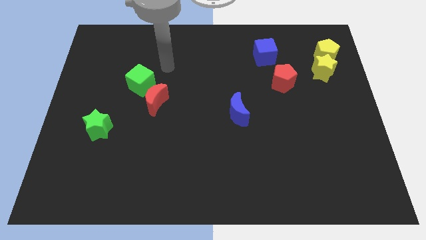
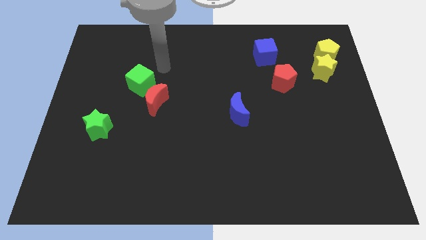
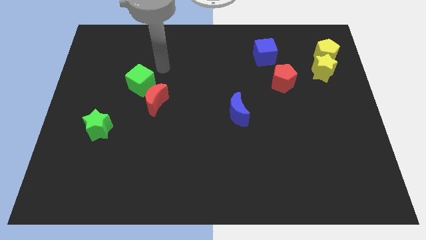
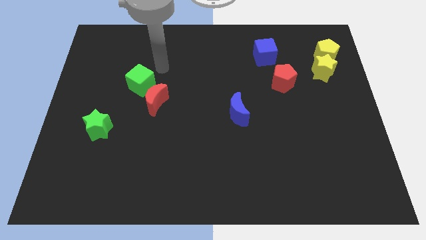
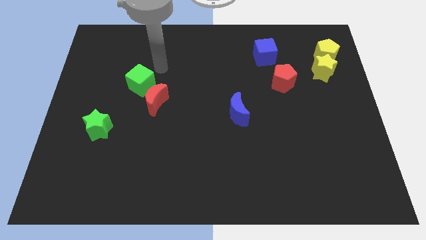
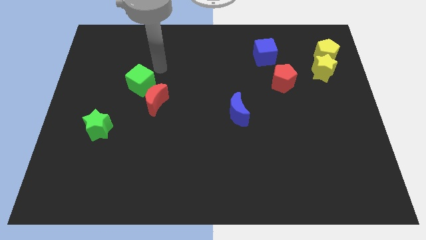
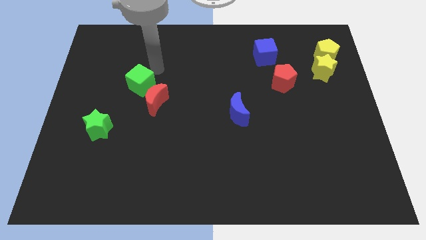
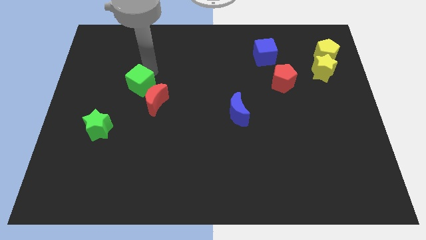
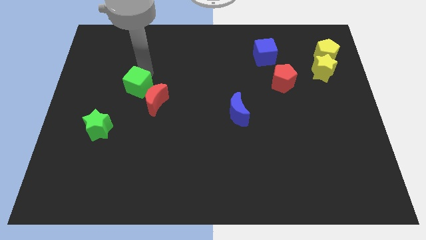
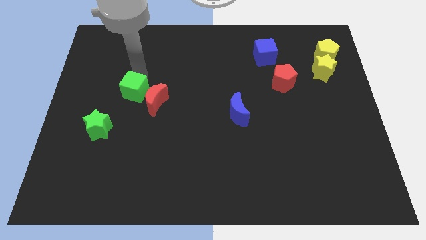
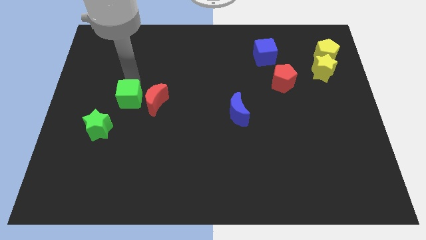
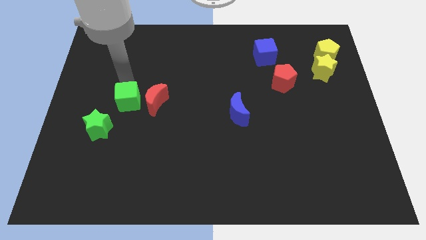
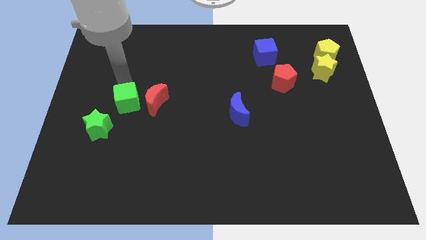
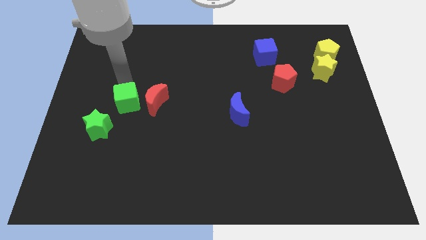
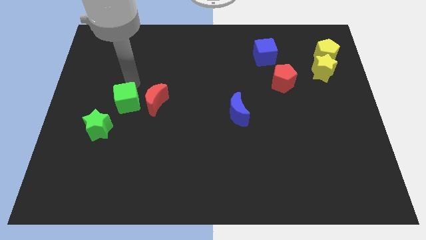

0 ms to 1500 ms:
push the green cube towards the green star

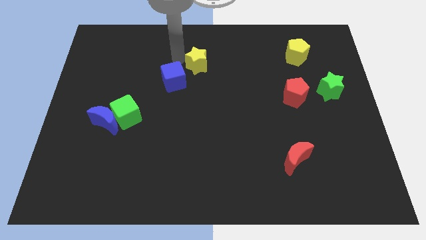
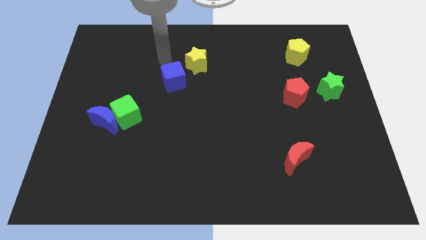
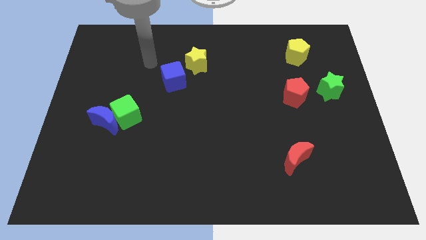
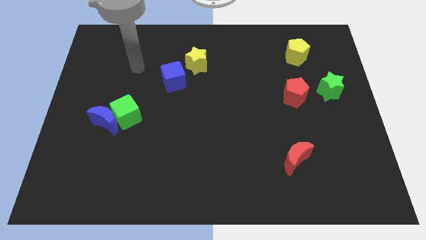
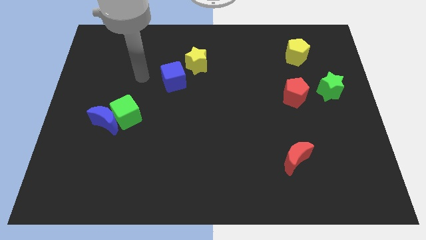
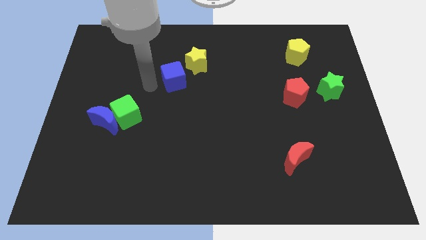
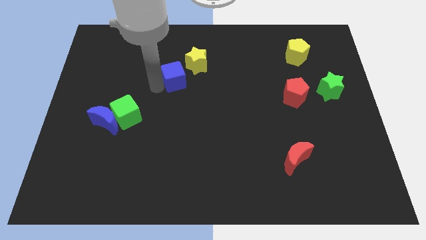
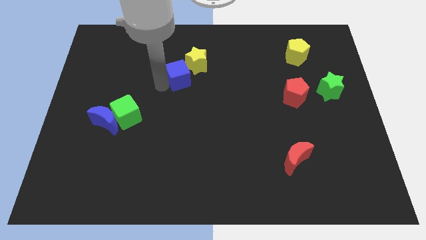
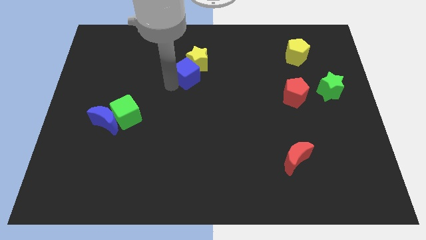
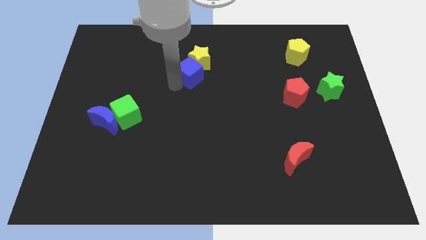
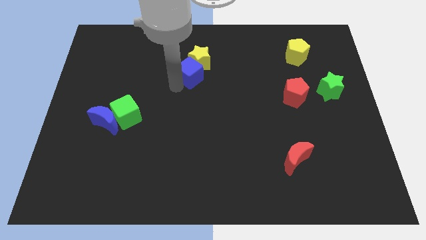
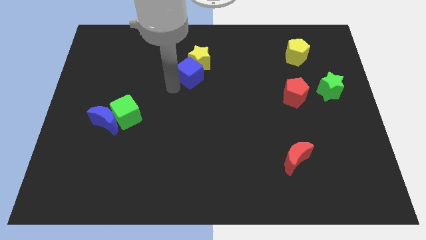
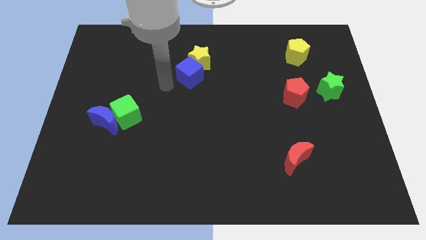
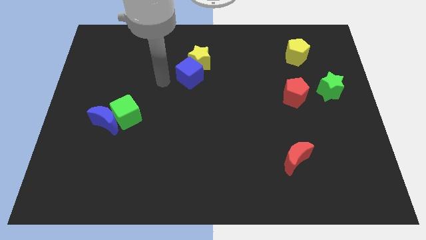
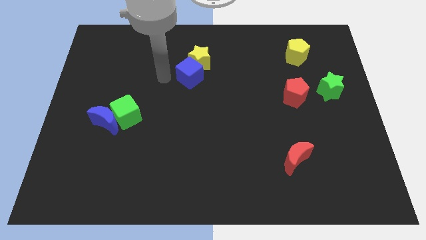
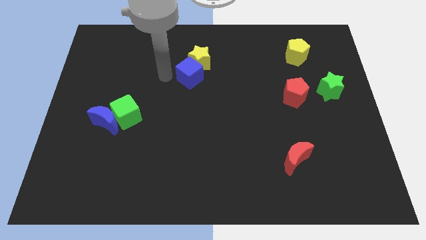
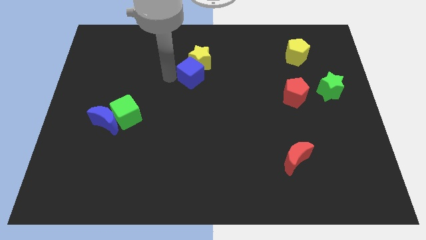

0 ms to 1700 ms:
move blue cube into the yellow star

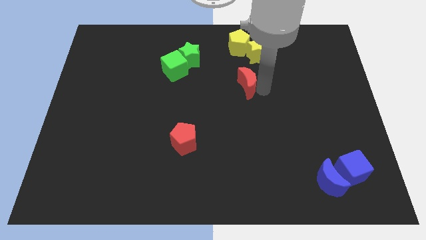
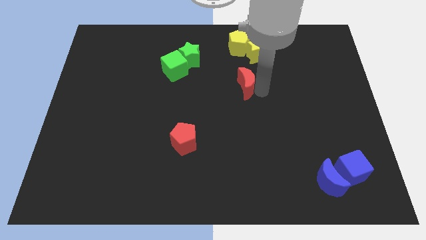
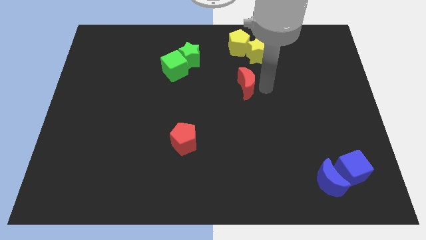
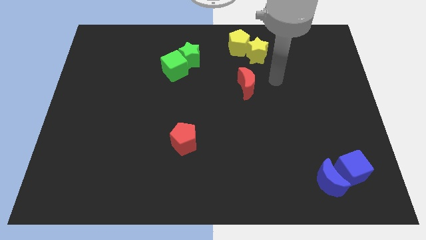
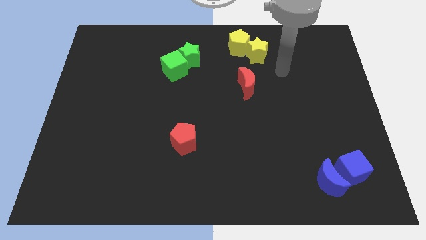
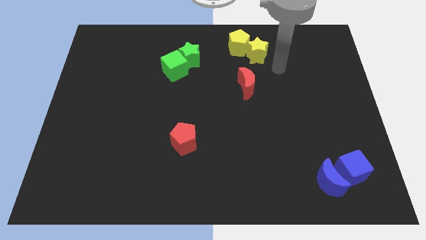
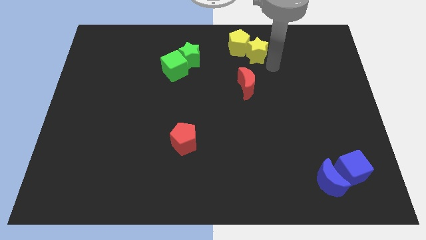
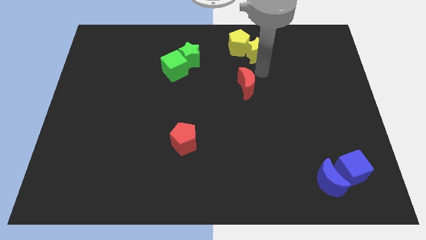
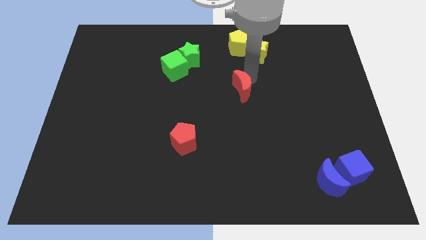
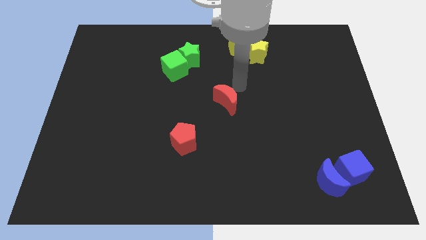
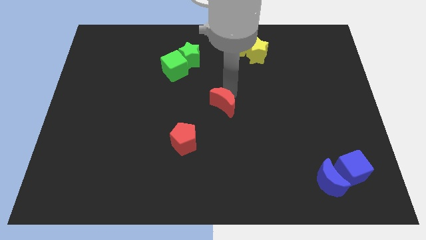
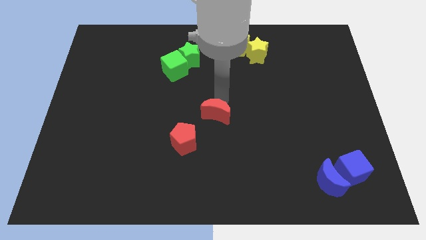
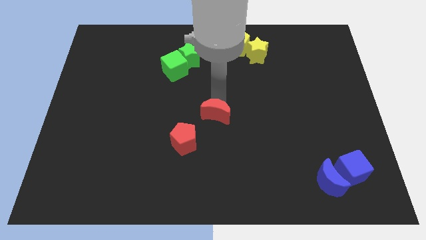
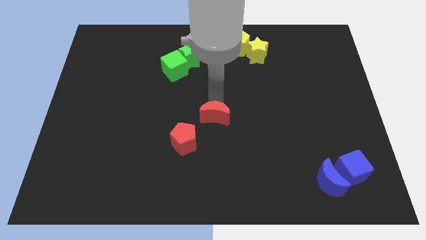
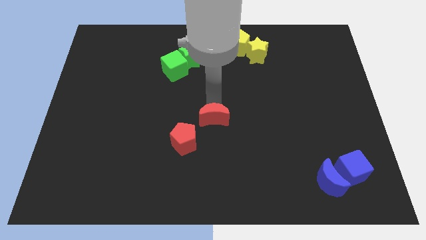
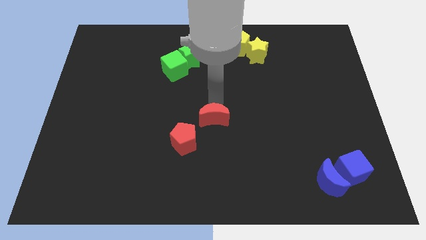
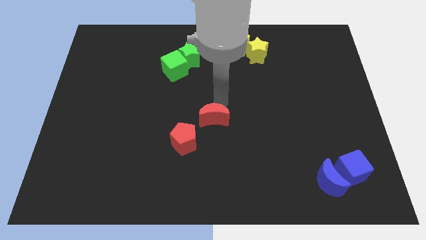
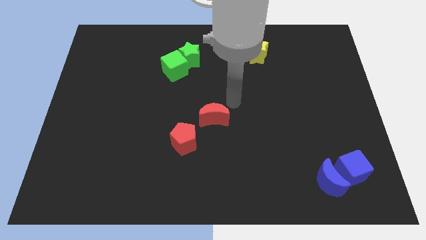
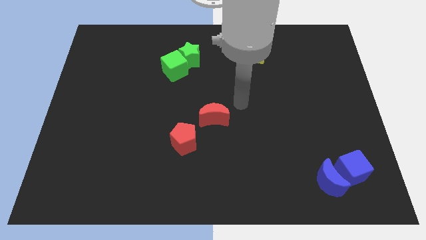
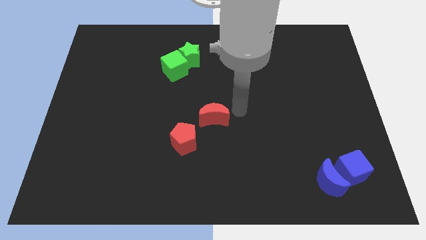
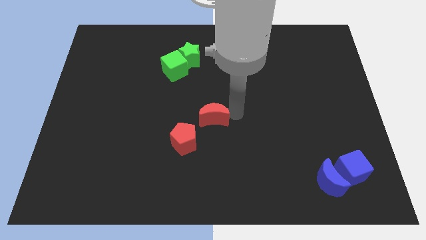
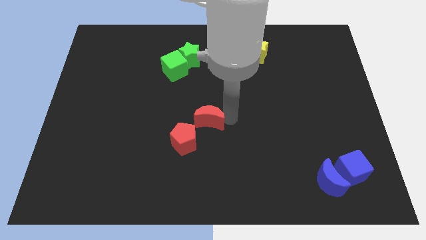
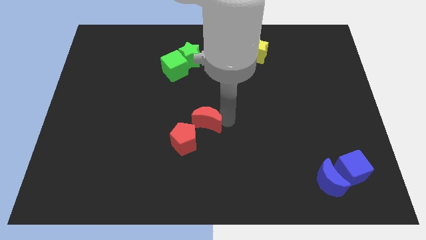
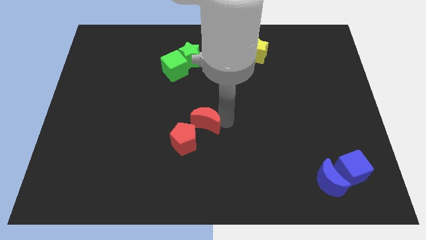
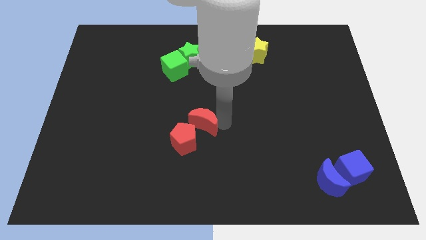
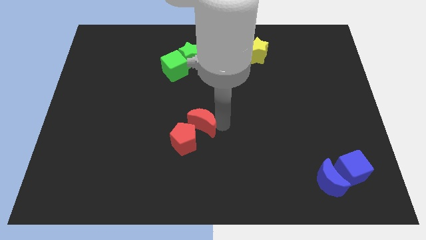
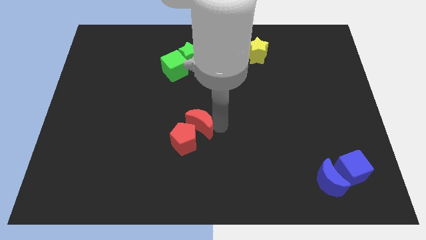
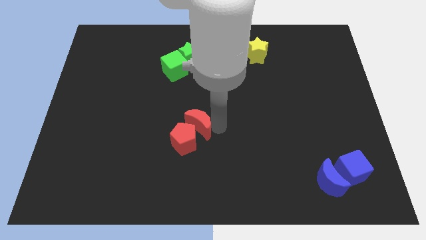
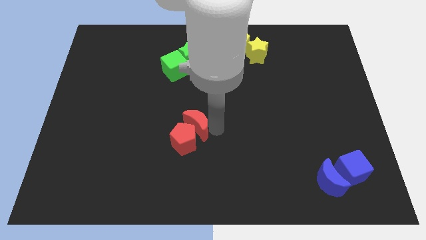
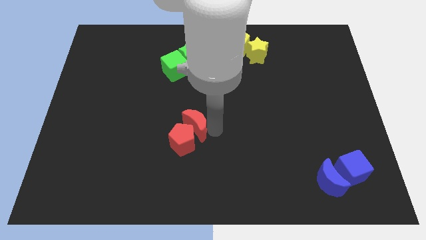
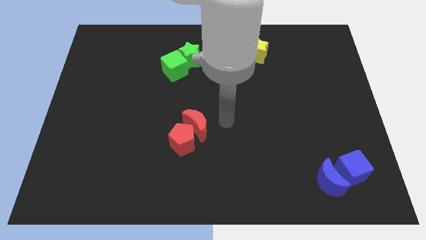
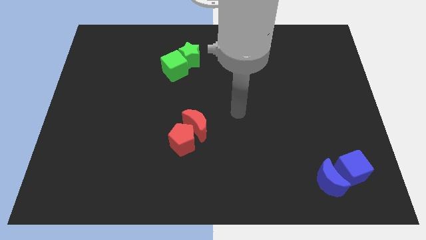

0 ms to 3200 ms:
slide the red crescent into the red pentagon

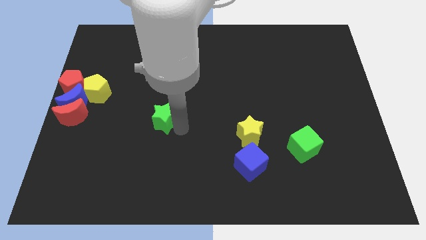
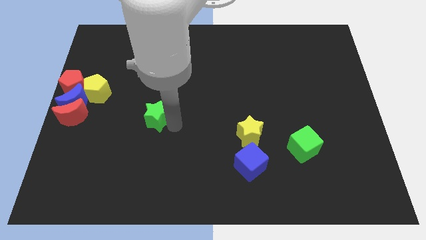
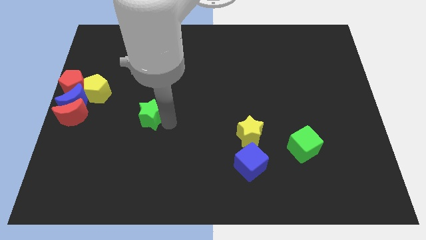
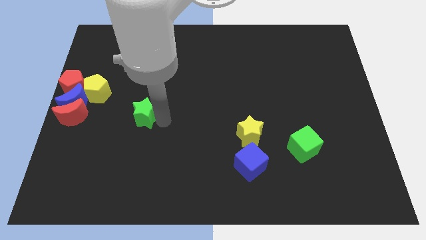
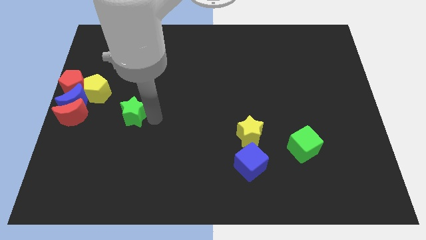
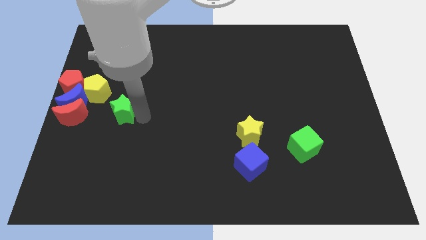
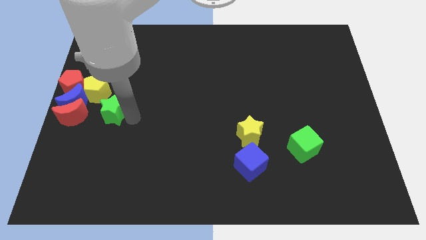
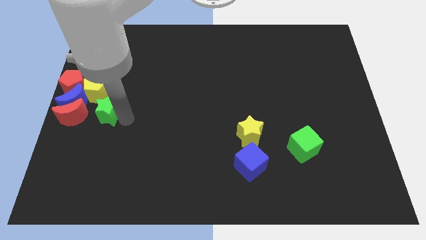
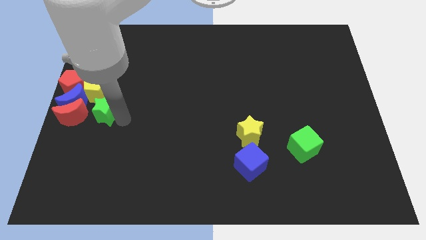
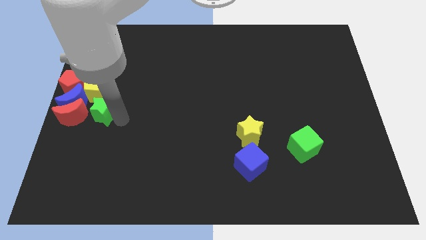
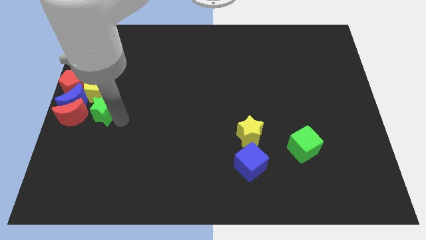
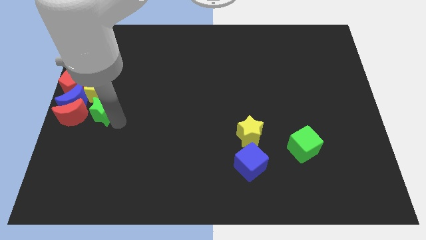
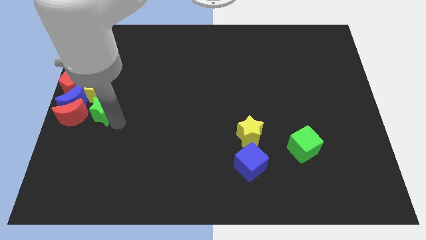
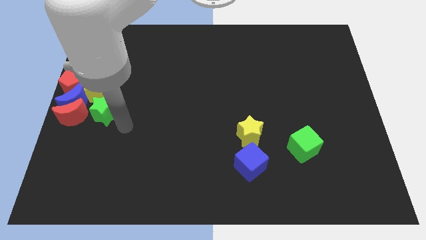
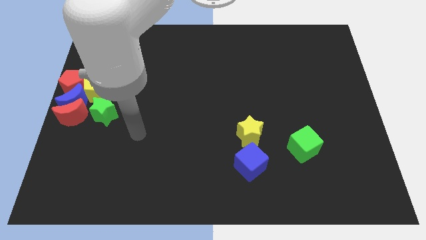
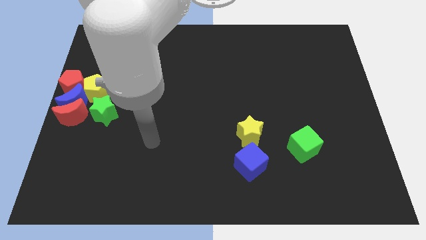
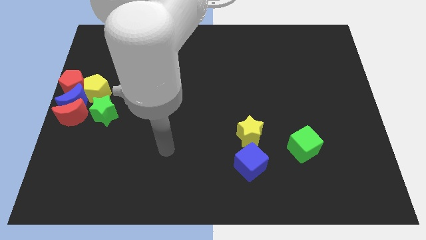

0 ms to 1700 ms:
move the green star to the right side of the red crescent

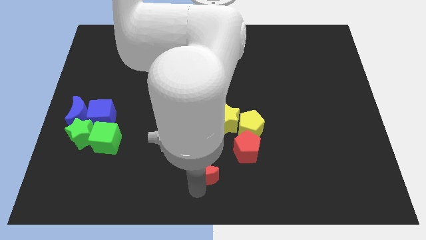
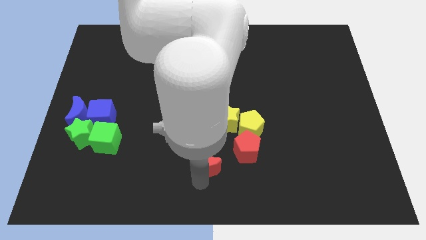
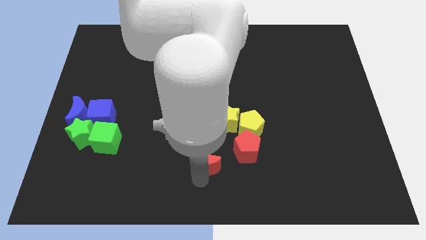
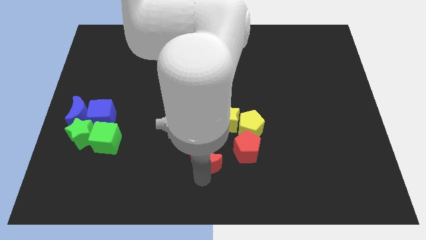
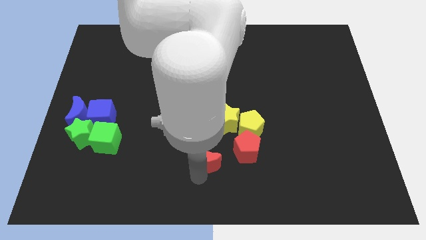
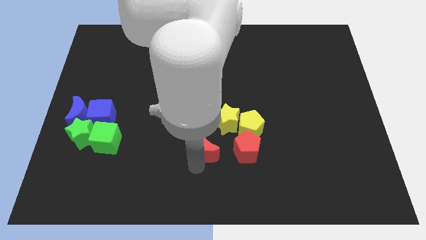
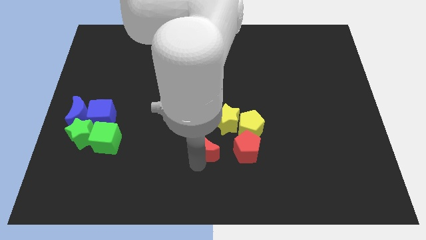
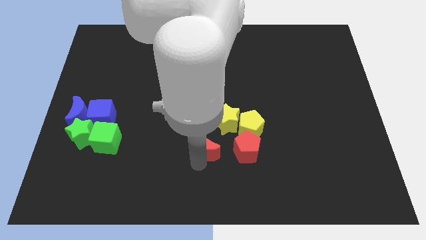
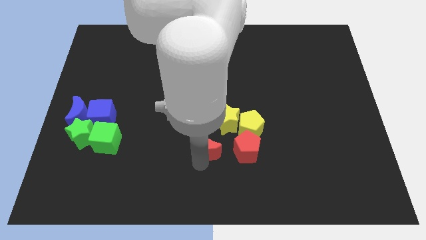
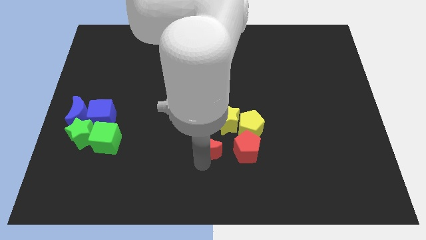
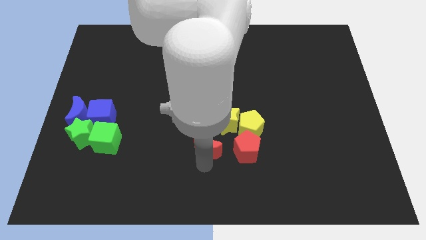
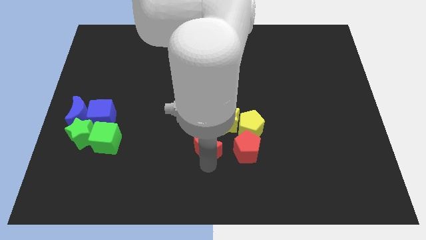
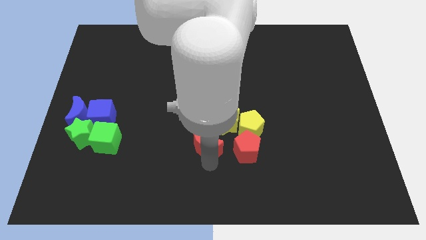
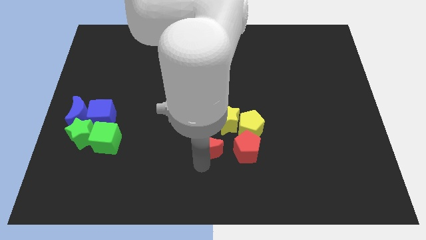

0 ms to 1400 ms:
place the red crescent left to the red pentagon
